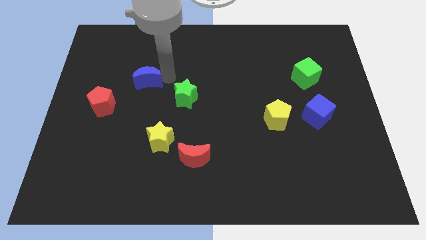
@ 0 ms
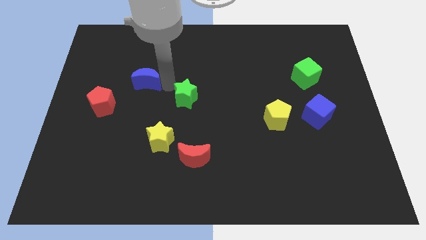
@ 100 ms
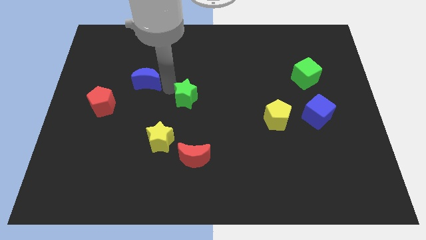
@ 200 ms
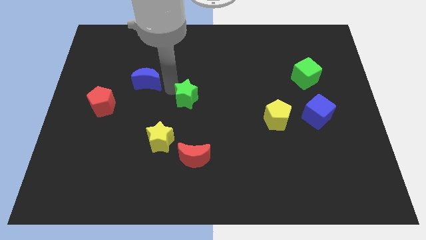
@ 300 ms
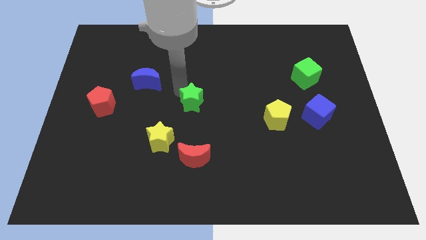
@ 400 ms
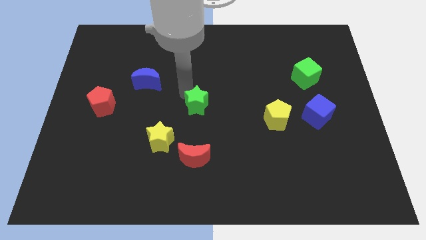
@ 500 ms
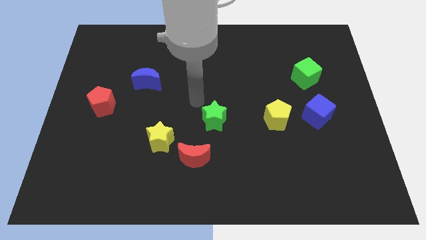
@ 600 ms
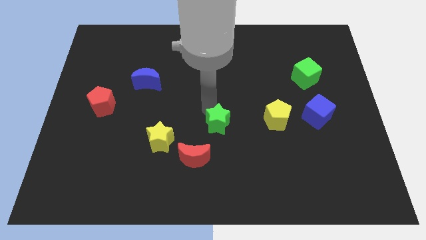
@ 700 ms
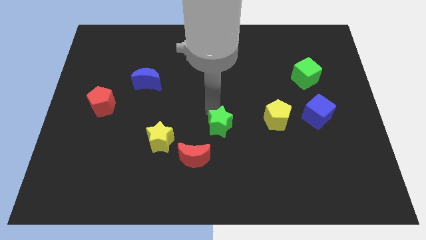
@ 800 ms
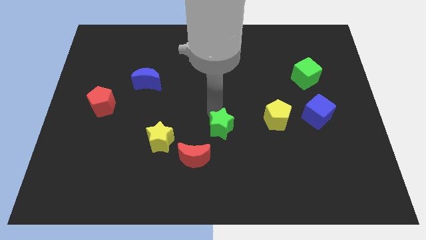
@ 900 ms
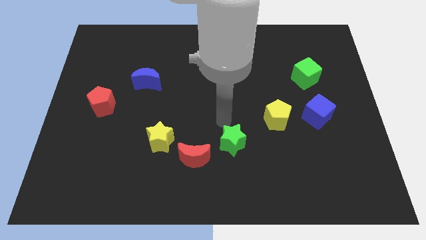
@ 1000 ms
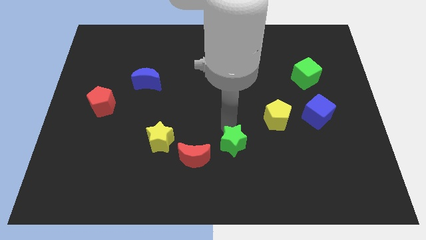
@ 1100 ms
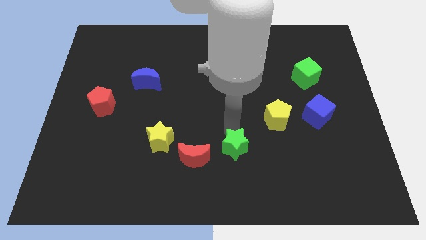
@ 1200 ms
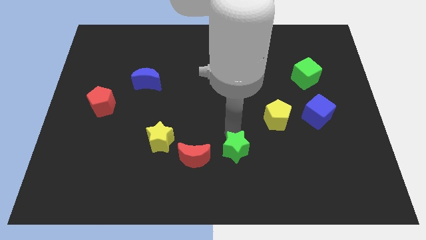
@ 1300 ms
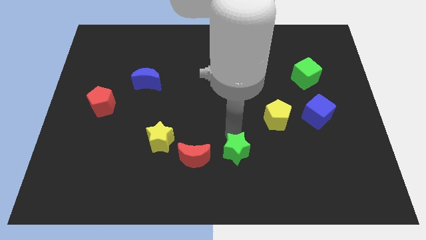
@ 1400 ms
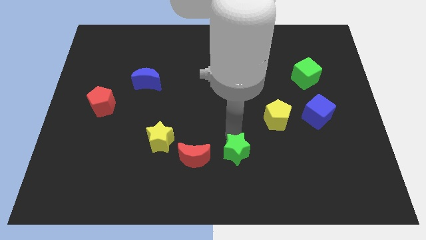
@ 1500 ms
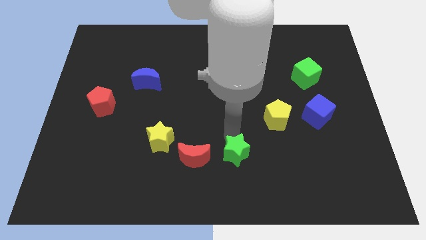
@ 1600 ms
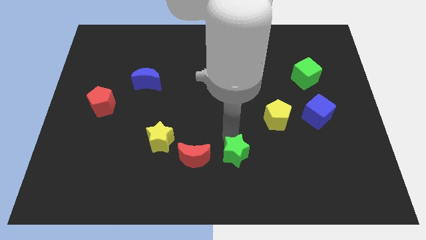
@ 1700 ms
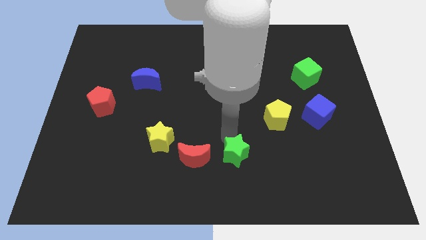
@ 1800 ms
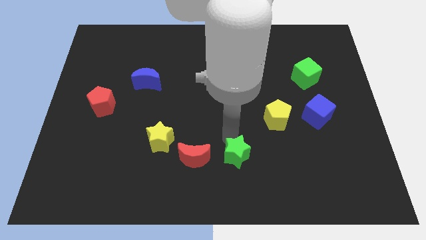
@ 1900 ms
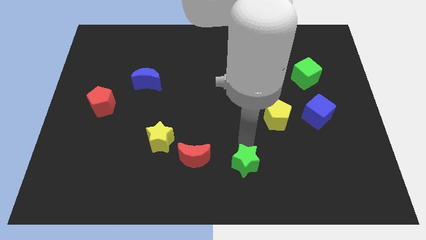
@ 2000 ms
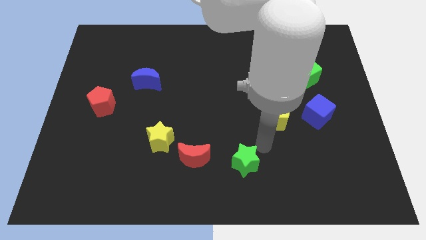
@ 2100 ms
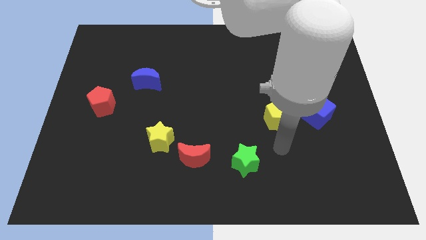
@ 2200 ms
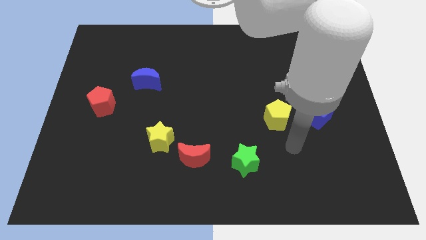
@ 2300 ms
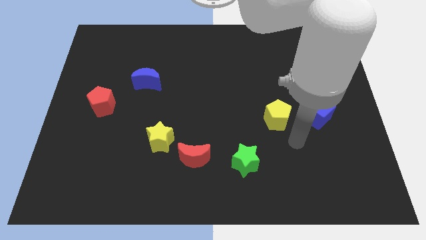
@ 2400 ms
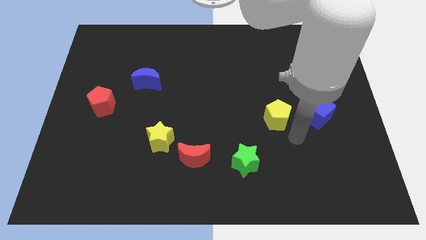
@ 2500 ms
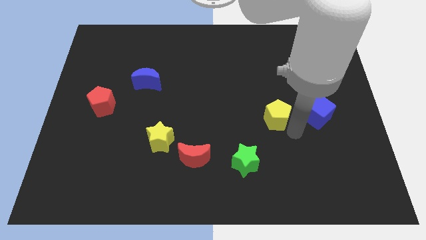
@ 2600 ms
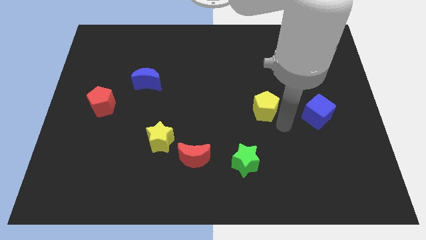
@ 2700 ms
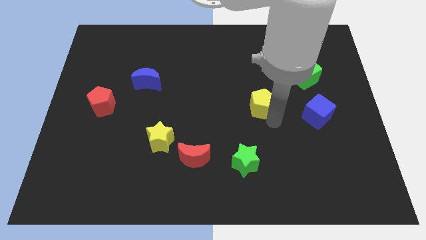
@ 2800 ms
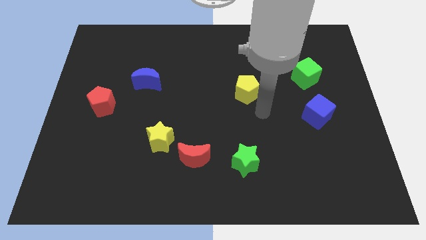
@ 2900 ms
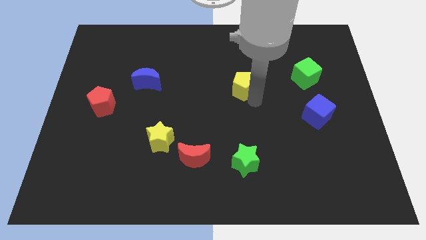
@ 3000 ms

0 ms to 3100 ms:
move the green star to bottom center

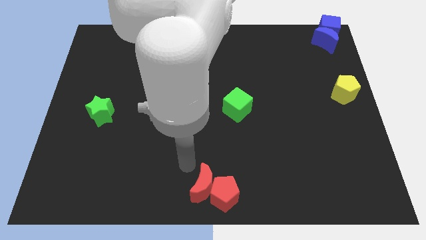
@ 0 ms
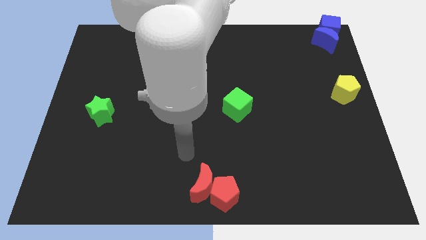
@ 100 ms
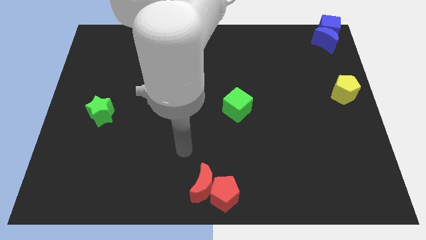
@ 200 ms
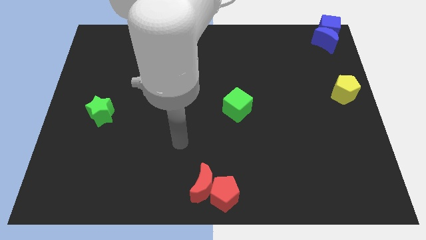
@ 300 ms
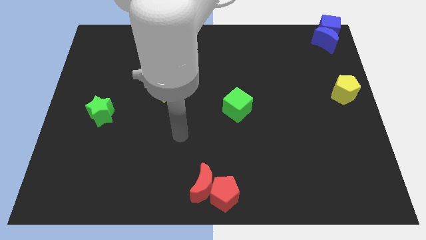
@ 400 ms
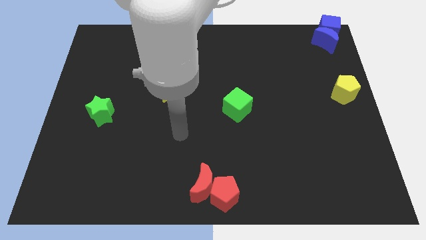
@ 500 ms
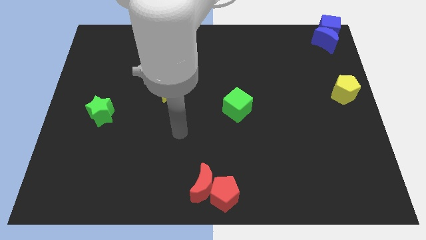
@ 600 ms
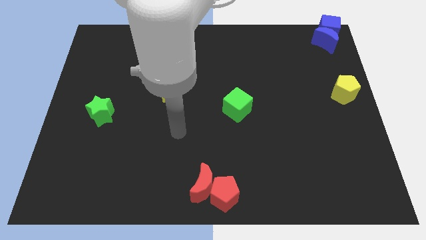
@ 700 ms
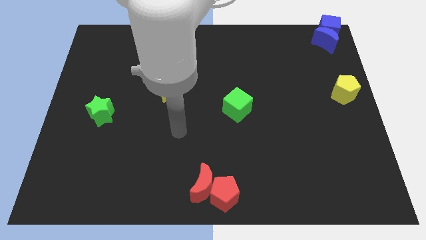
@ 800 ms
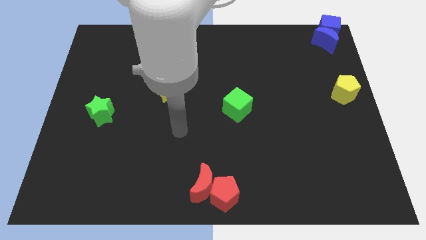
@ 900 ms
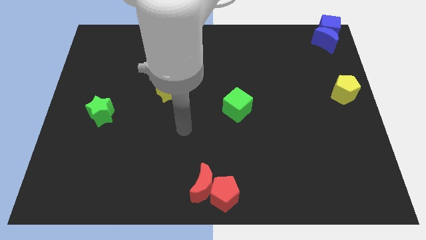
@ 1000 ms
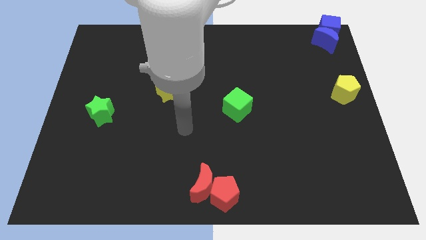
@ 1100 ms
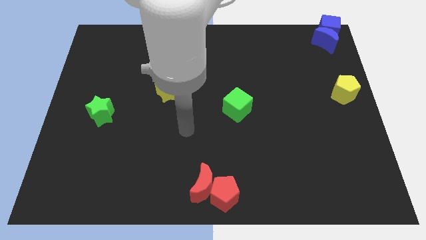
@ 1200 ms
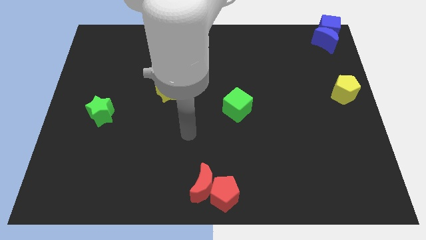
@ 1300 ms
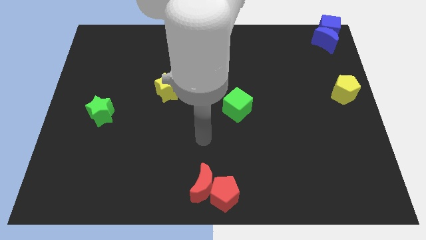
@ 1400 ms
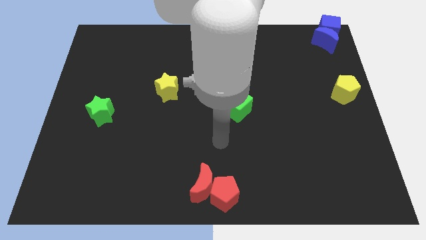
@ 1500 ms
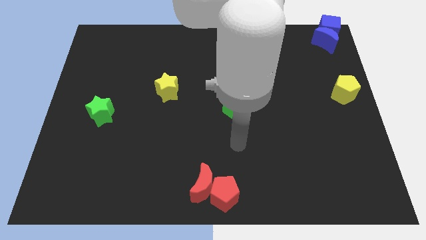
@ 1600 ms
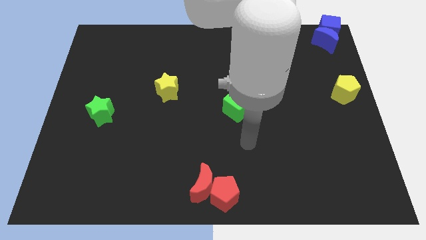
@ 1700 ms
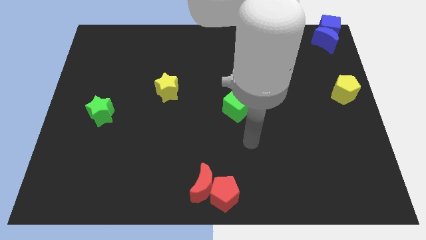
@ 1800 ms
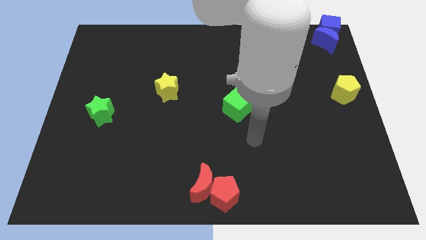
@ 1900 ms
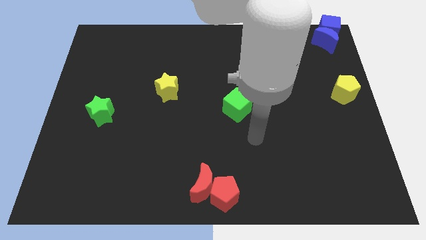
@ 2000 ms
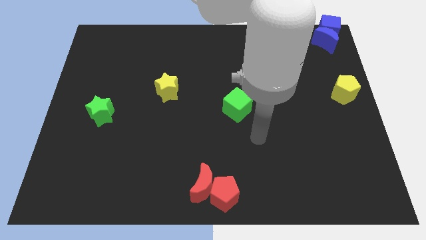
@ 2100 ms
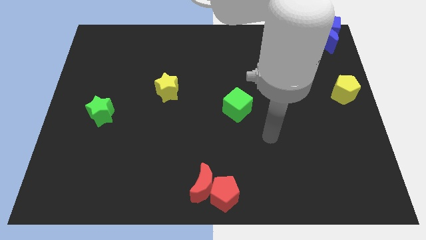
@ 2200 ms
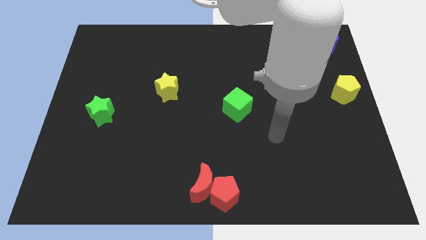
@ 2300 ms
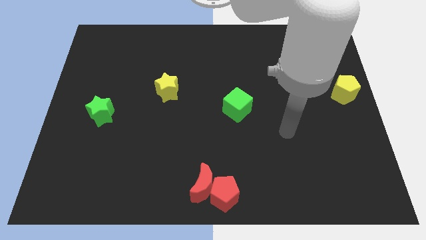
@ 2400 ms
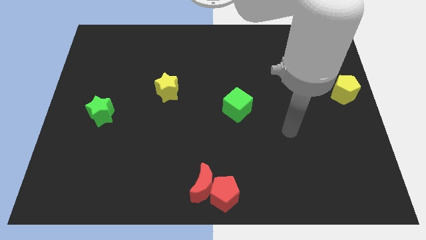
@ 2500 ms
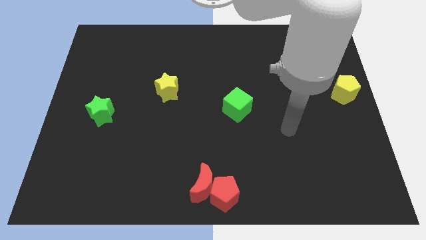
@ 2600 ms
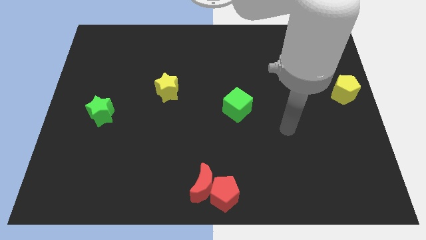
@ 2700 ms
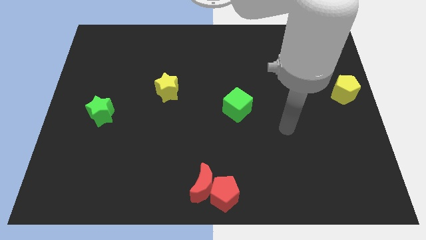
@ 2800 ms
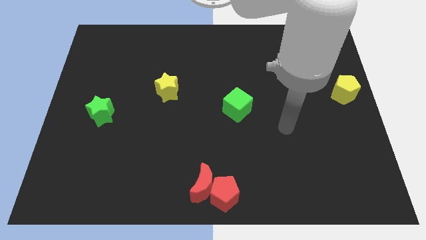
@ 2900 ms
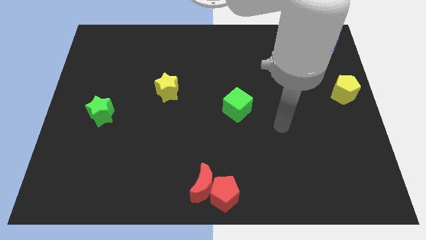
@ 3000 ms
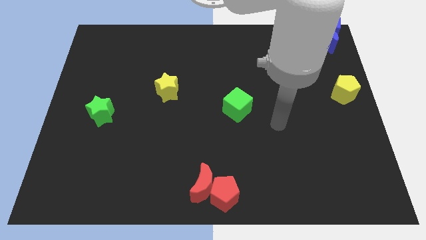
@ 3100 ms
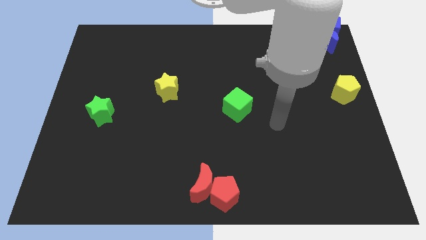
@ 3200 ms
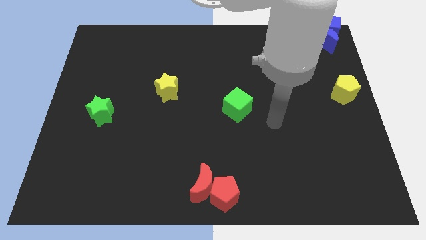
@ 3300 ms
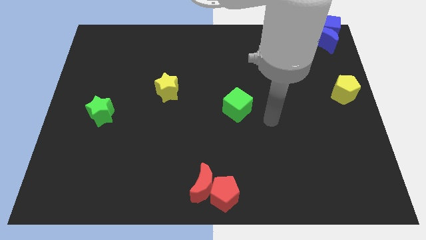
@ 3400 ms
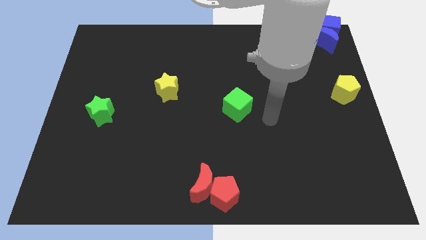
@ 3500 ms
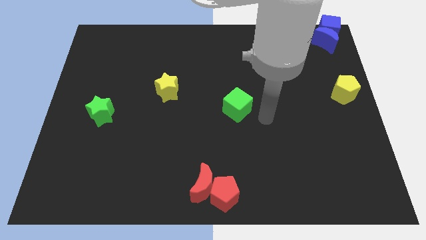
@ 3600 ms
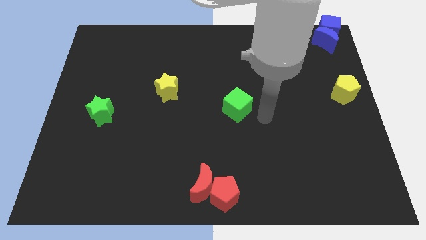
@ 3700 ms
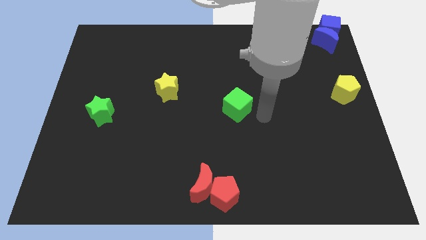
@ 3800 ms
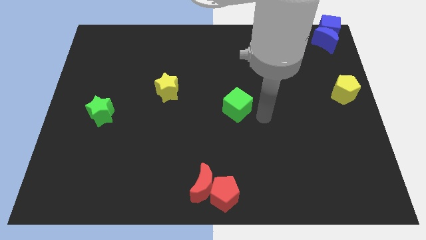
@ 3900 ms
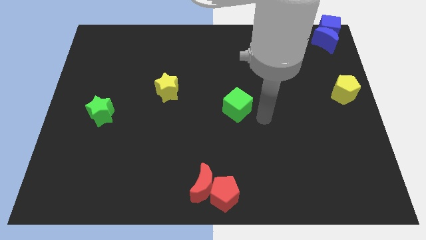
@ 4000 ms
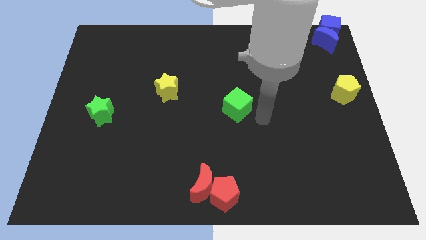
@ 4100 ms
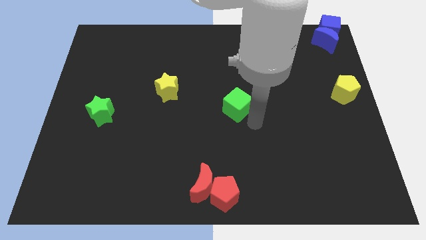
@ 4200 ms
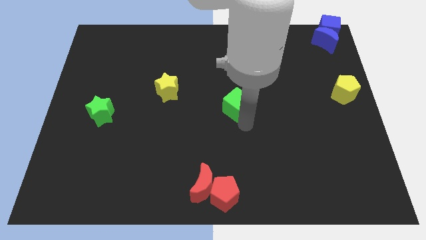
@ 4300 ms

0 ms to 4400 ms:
point your arm at the bottom of green cube

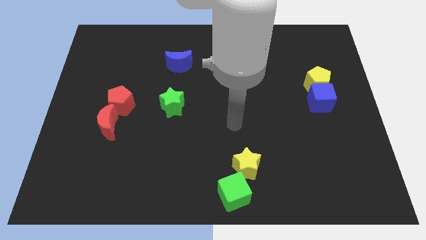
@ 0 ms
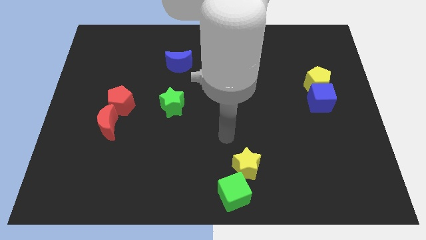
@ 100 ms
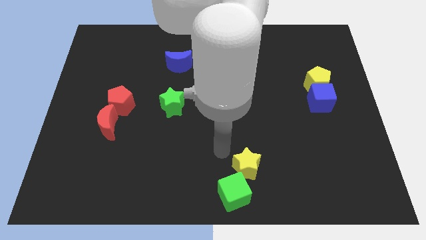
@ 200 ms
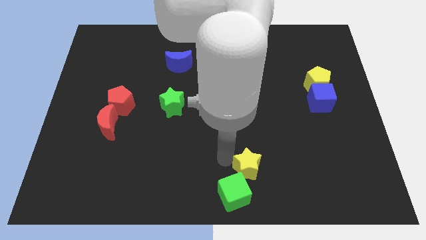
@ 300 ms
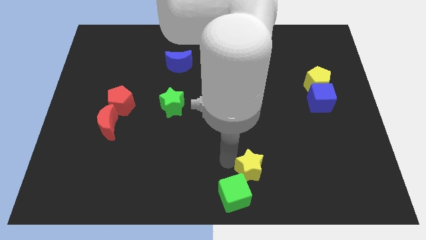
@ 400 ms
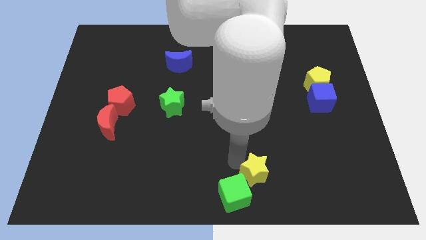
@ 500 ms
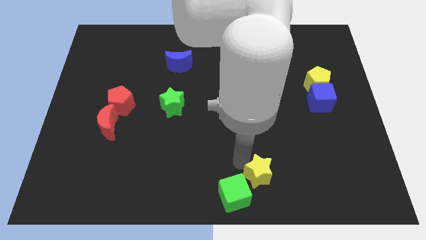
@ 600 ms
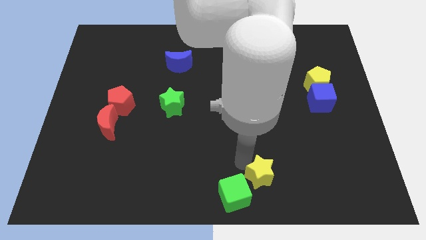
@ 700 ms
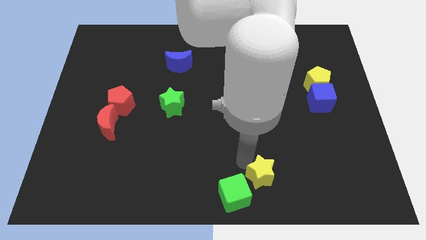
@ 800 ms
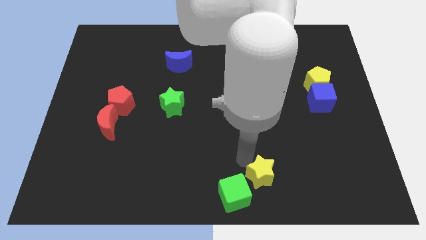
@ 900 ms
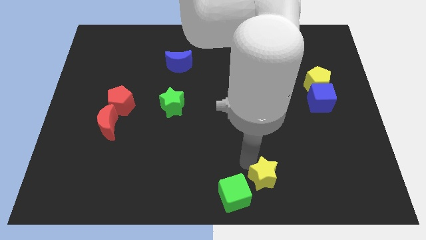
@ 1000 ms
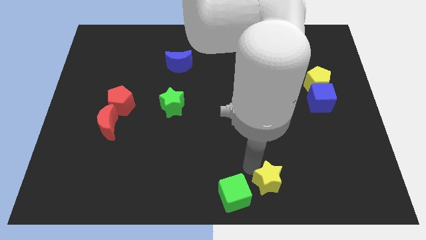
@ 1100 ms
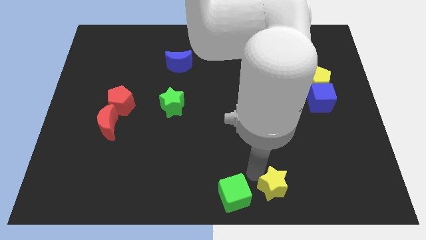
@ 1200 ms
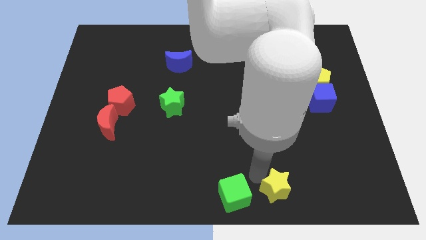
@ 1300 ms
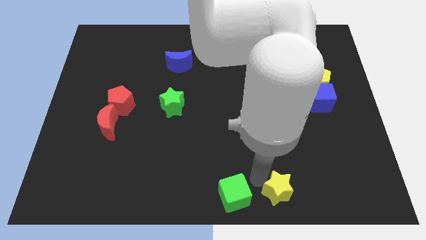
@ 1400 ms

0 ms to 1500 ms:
push the yellow star to the right side of green cube
